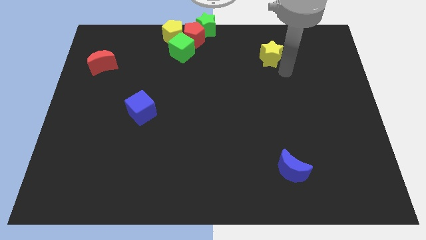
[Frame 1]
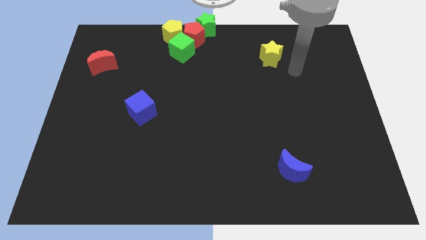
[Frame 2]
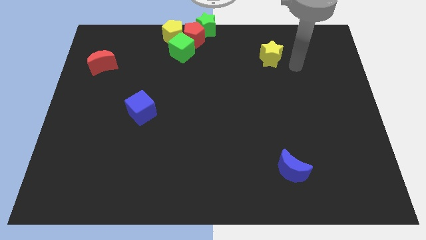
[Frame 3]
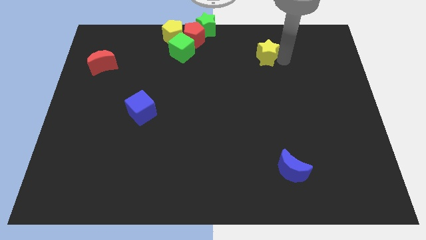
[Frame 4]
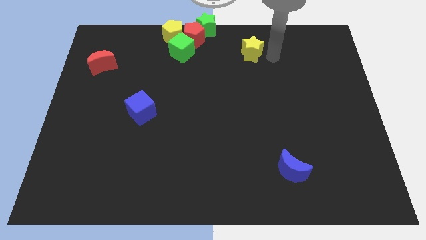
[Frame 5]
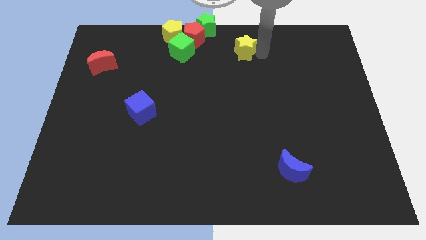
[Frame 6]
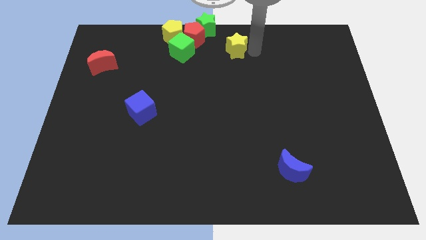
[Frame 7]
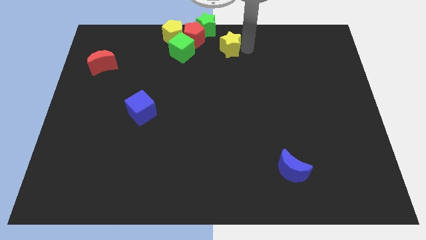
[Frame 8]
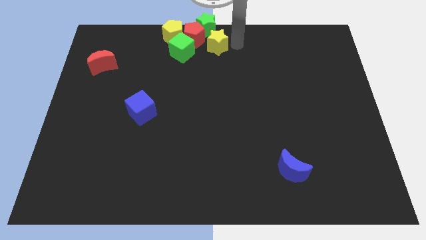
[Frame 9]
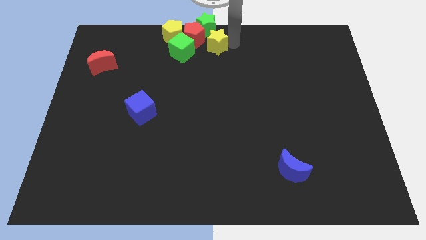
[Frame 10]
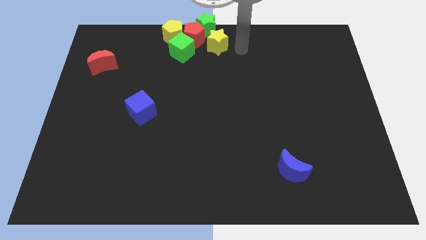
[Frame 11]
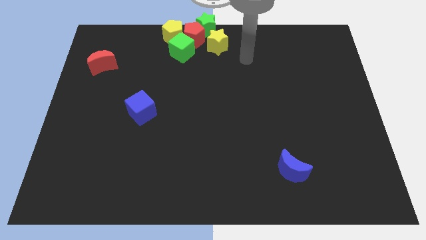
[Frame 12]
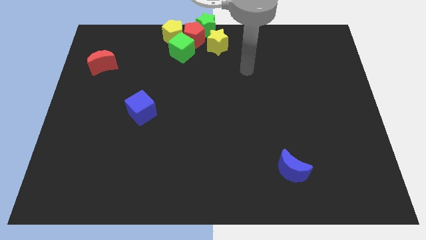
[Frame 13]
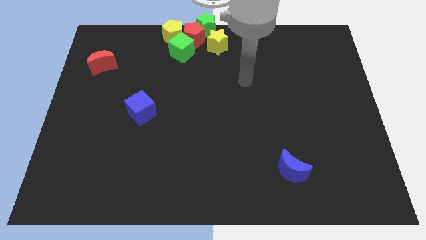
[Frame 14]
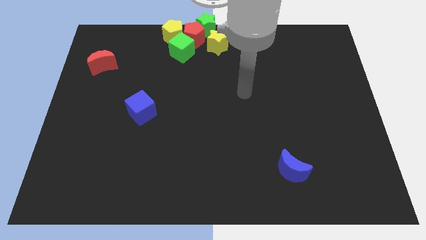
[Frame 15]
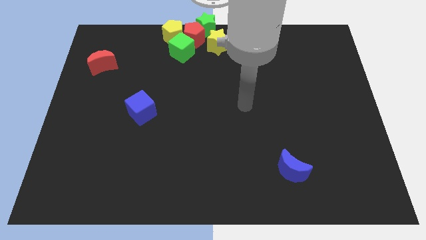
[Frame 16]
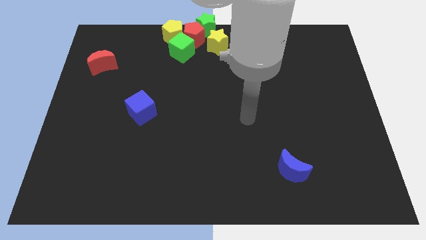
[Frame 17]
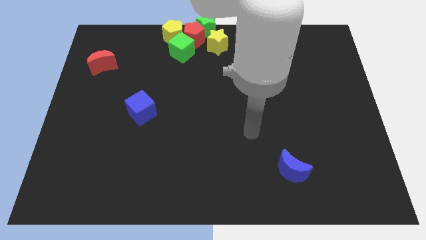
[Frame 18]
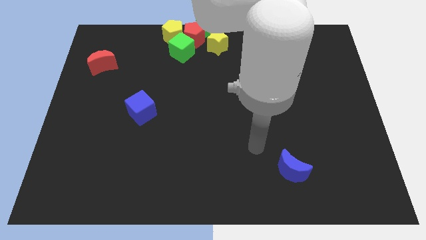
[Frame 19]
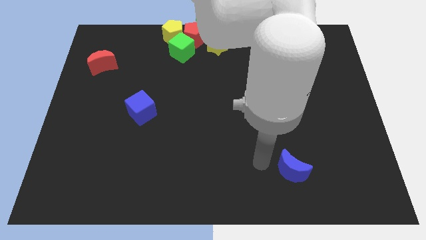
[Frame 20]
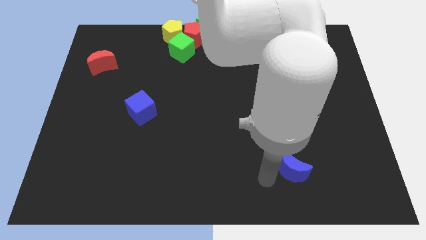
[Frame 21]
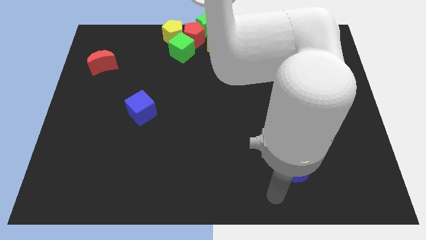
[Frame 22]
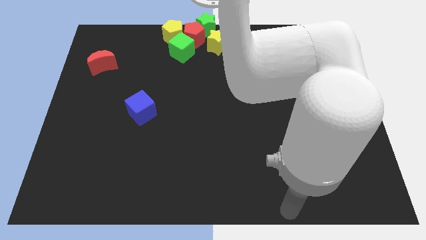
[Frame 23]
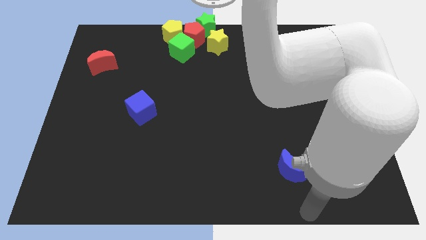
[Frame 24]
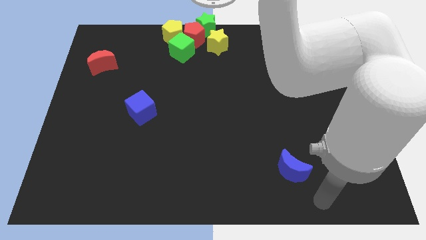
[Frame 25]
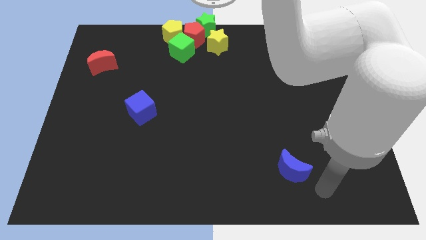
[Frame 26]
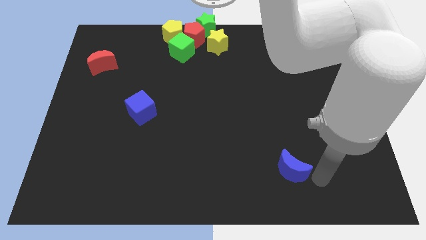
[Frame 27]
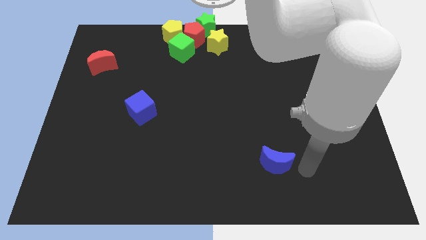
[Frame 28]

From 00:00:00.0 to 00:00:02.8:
point your arm right to blue moon

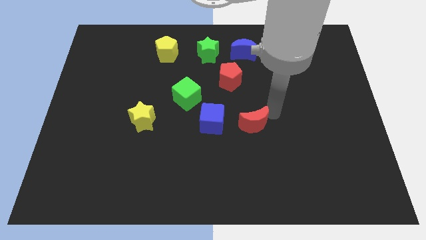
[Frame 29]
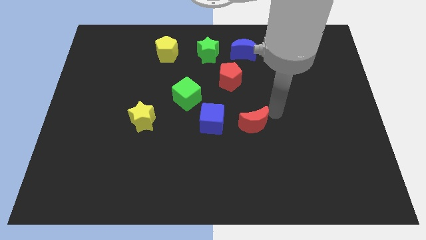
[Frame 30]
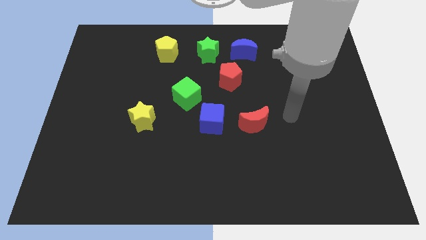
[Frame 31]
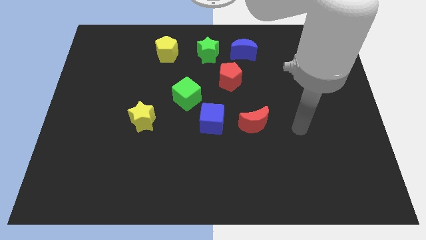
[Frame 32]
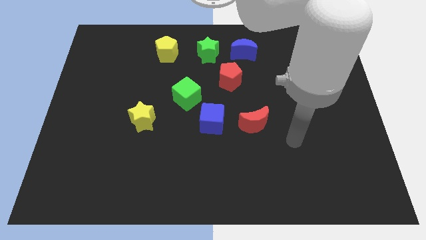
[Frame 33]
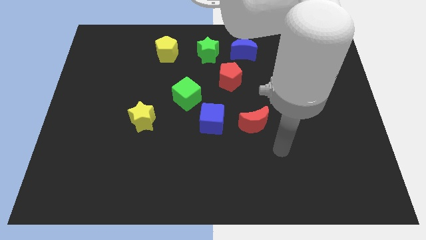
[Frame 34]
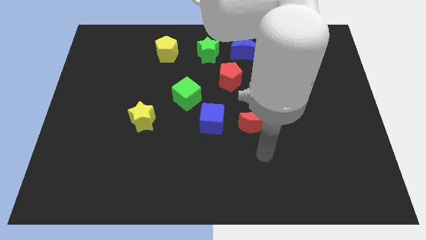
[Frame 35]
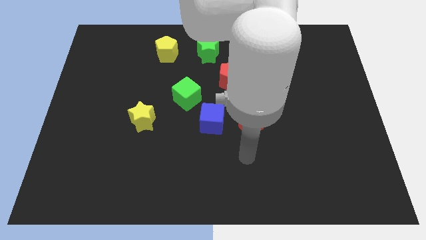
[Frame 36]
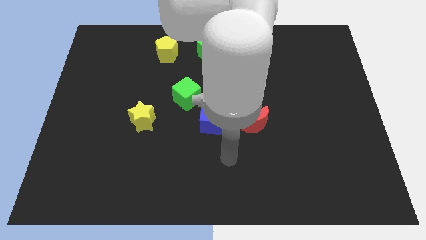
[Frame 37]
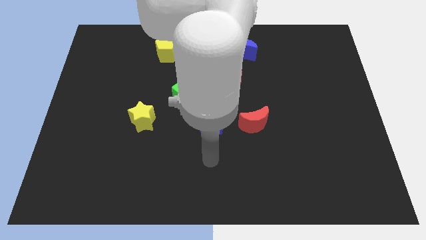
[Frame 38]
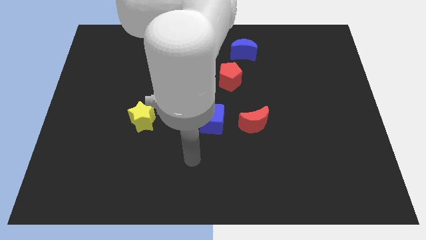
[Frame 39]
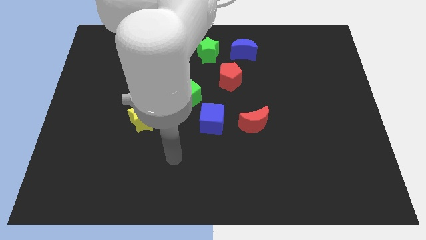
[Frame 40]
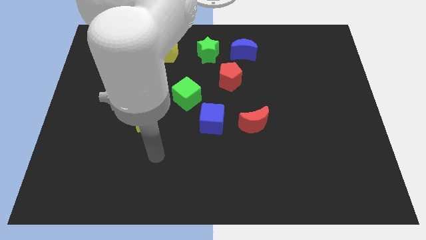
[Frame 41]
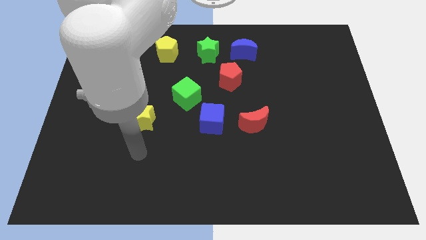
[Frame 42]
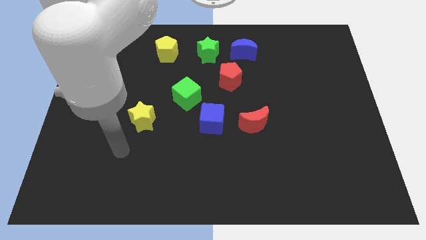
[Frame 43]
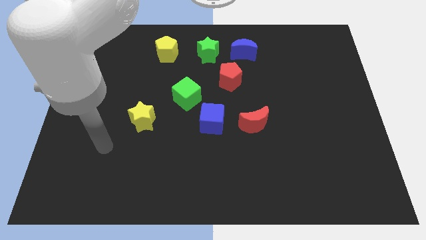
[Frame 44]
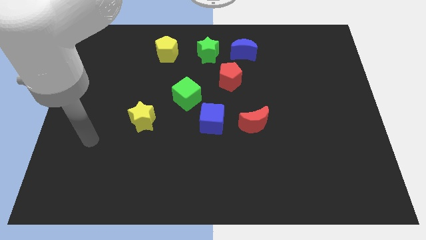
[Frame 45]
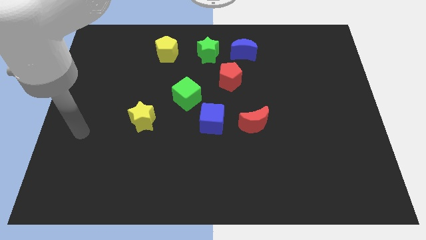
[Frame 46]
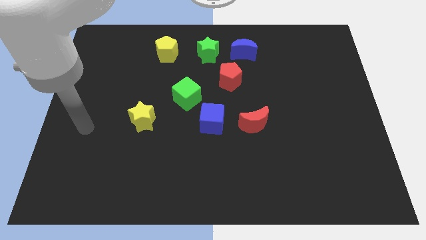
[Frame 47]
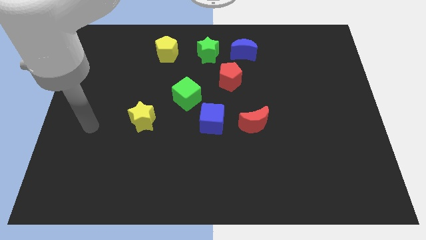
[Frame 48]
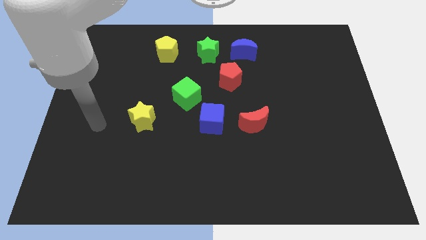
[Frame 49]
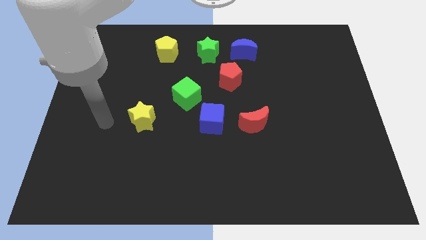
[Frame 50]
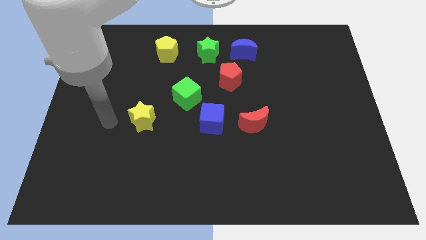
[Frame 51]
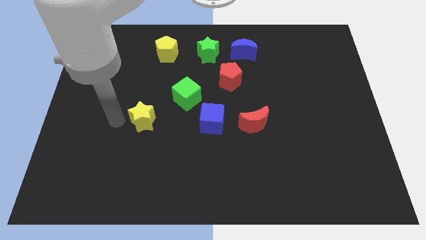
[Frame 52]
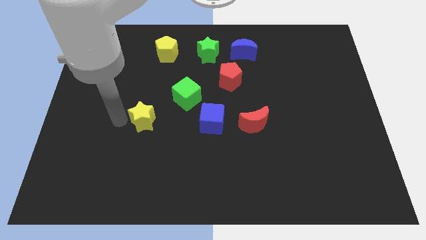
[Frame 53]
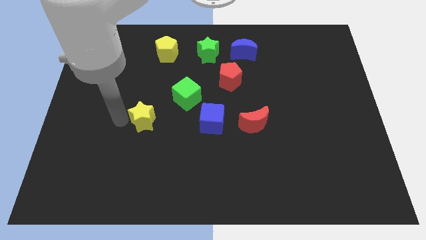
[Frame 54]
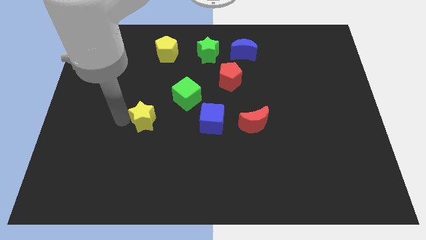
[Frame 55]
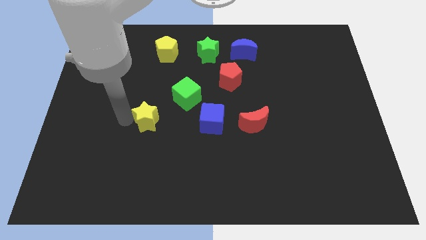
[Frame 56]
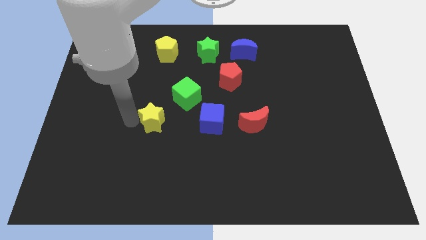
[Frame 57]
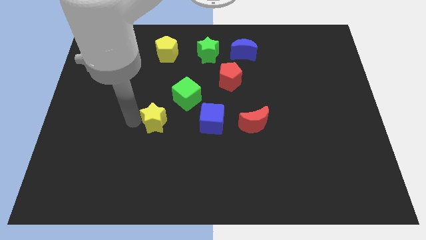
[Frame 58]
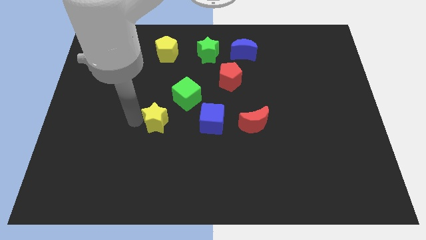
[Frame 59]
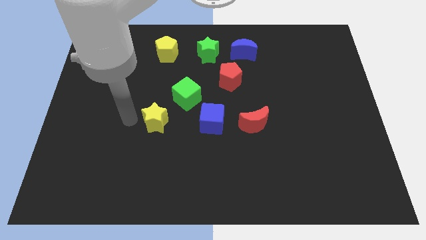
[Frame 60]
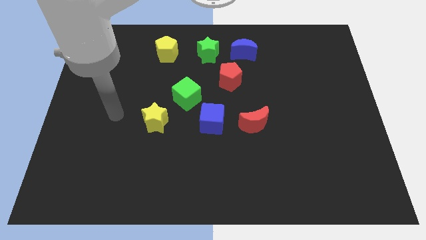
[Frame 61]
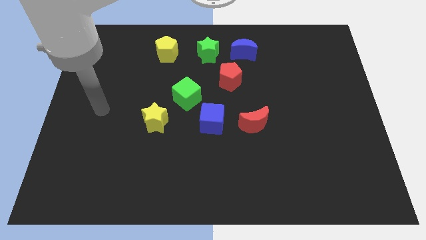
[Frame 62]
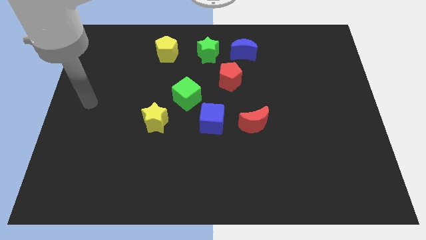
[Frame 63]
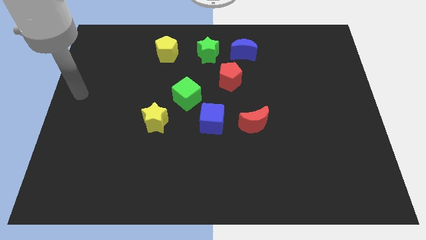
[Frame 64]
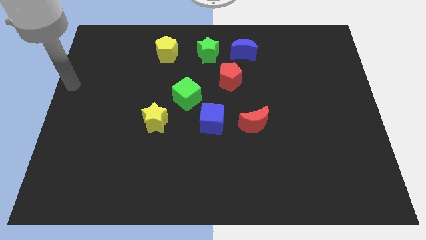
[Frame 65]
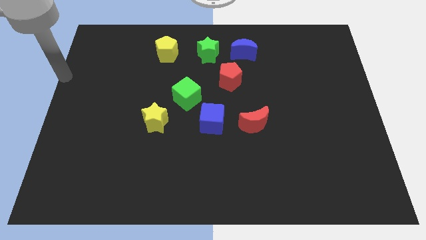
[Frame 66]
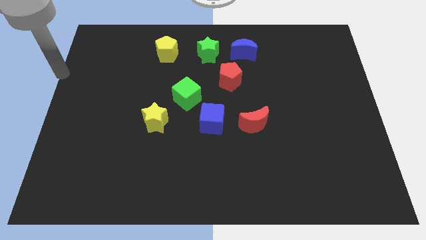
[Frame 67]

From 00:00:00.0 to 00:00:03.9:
slightly move the yellow star to the right side

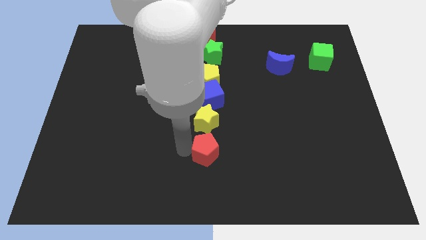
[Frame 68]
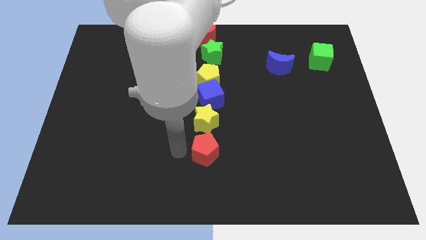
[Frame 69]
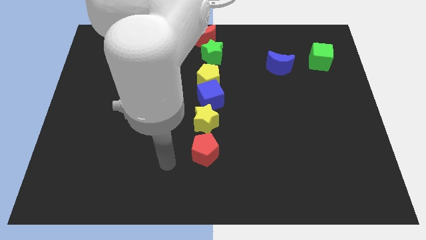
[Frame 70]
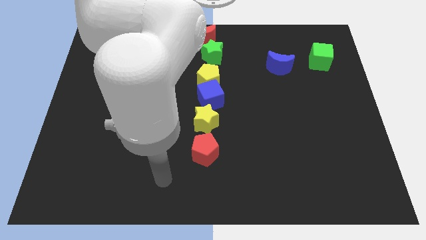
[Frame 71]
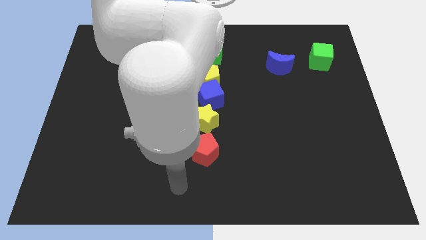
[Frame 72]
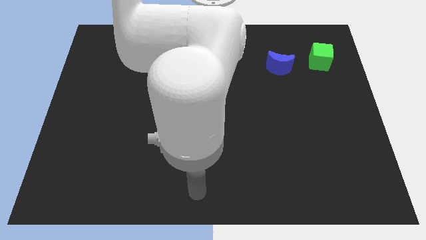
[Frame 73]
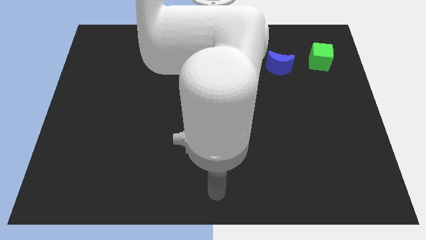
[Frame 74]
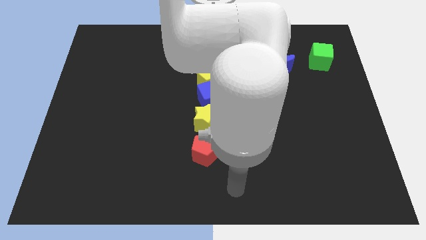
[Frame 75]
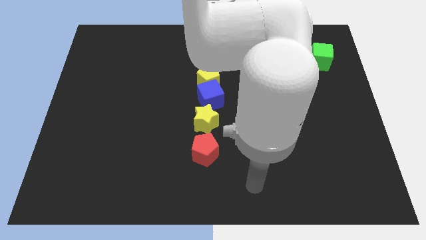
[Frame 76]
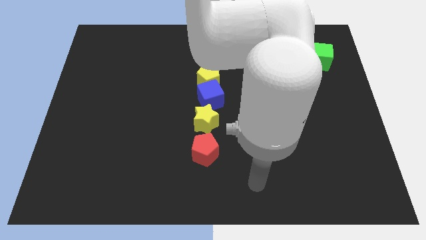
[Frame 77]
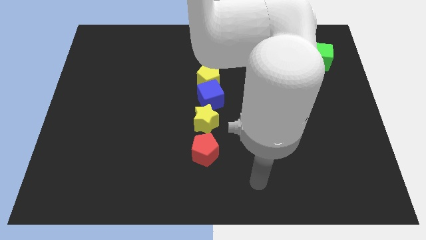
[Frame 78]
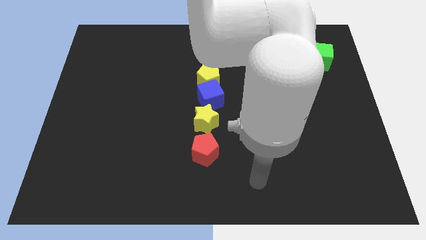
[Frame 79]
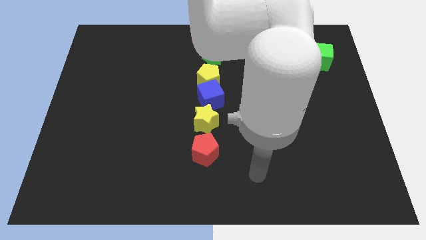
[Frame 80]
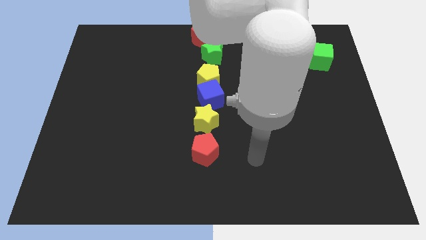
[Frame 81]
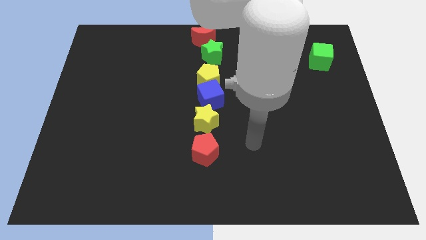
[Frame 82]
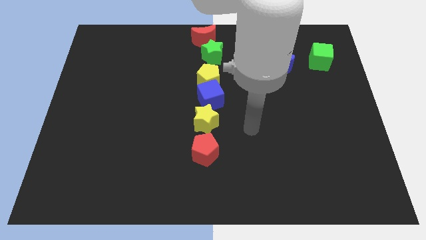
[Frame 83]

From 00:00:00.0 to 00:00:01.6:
move the arm away from the red pentagon

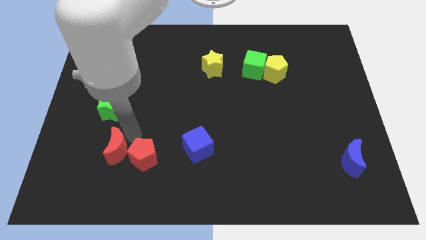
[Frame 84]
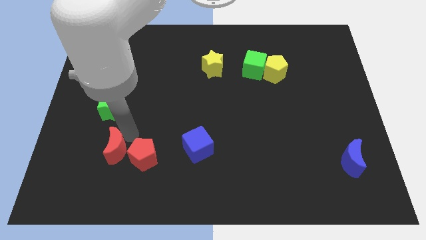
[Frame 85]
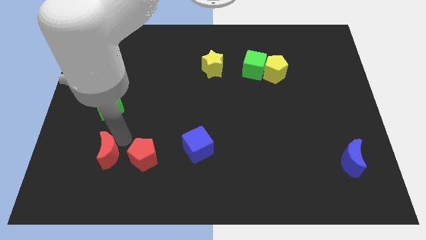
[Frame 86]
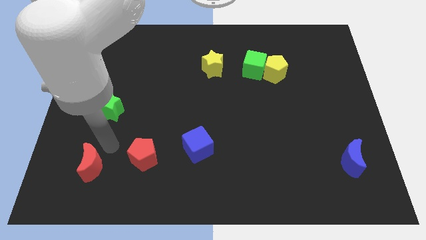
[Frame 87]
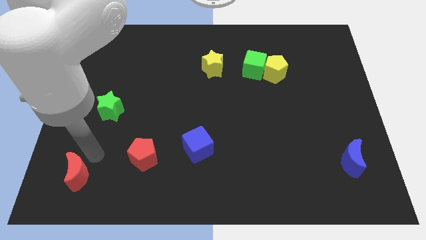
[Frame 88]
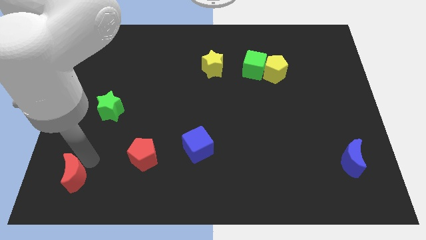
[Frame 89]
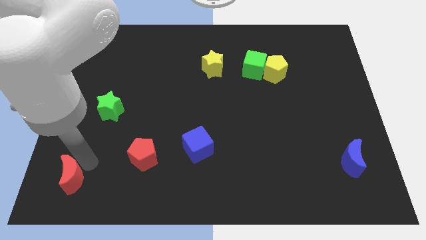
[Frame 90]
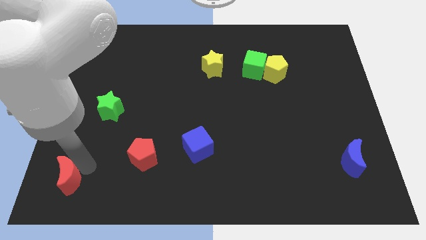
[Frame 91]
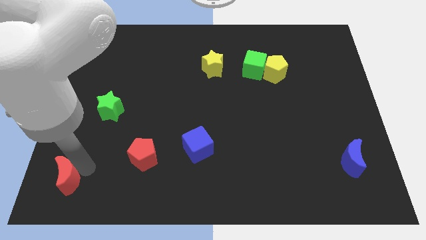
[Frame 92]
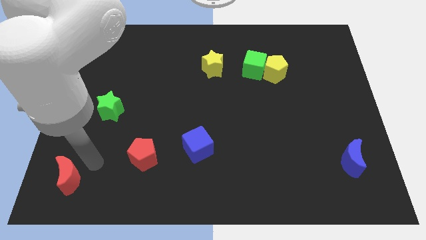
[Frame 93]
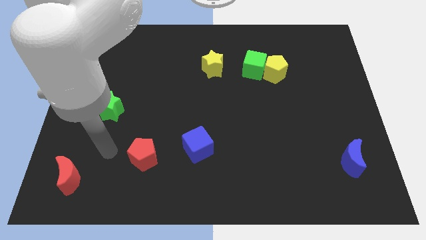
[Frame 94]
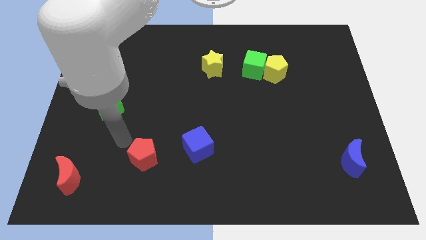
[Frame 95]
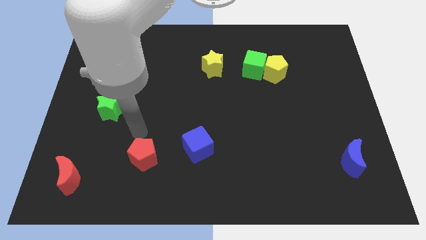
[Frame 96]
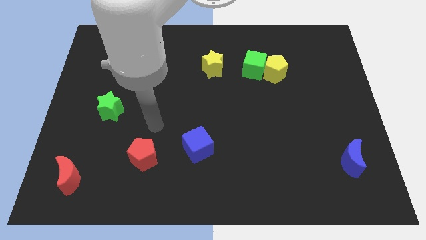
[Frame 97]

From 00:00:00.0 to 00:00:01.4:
separate the red crescent and the red pentagon
